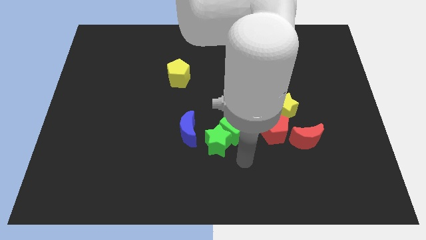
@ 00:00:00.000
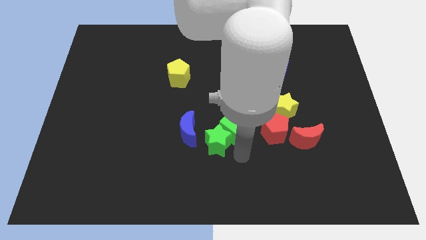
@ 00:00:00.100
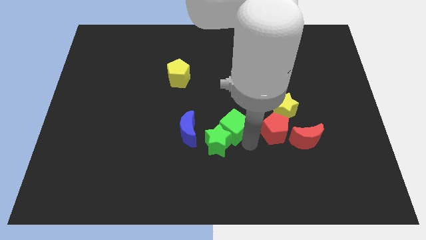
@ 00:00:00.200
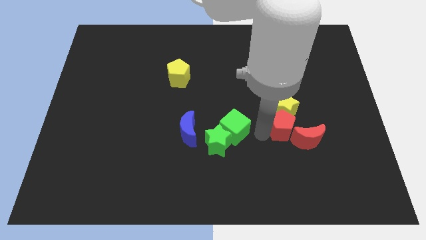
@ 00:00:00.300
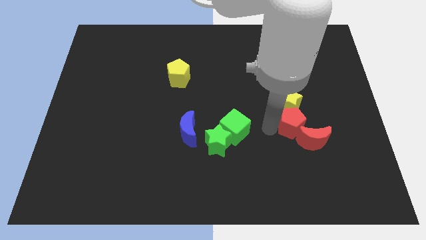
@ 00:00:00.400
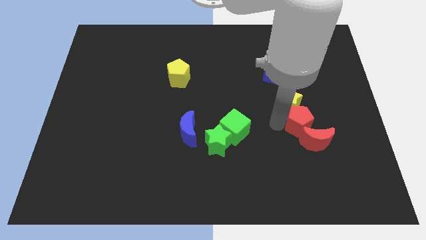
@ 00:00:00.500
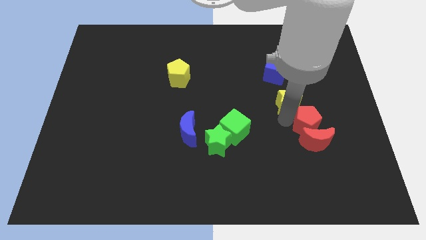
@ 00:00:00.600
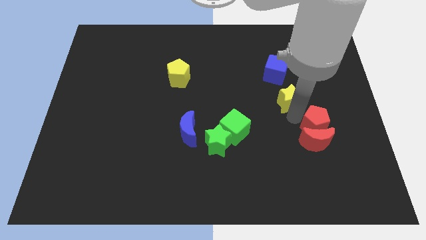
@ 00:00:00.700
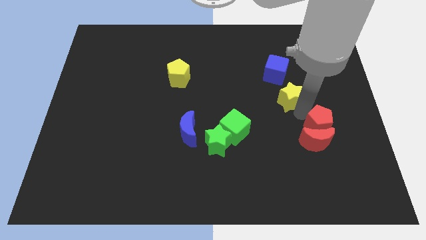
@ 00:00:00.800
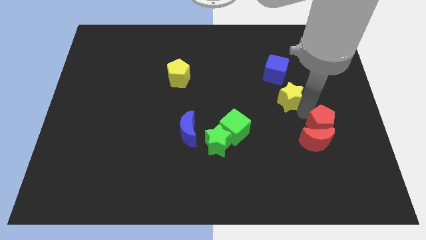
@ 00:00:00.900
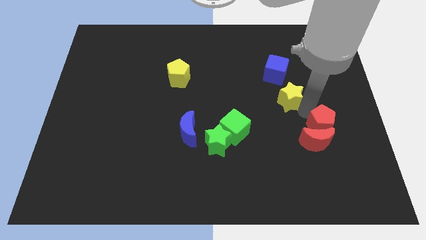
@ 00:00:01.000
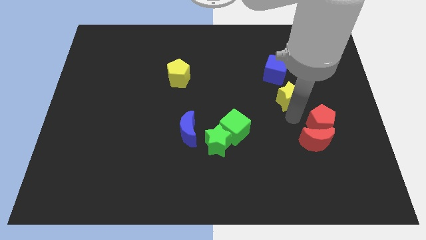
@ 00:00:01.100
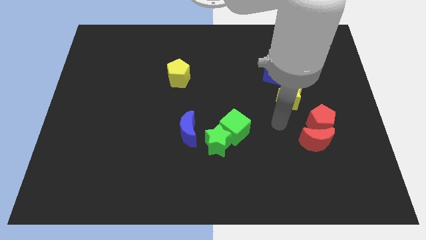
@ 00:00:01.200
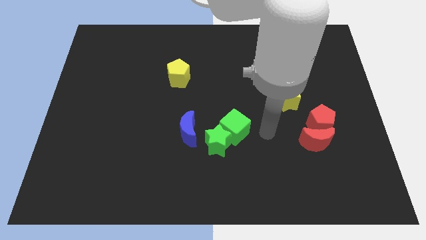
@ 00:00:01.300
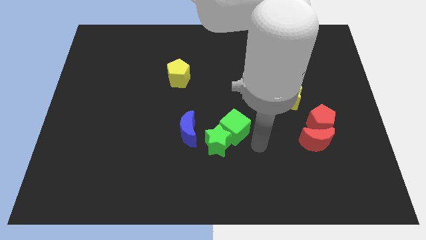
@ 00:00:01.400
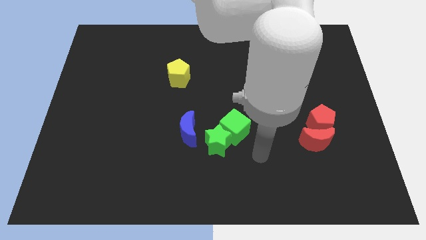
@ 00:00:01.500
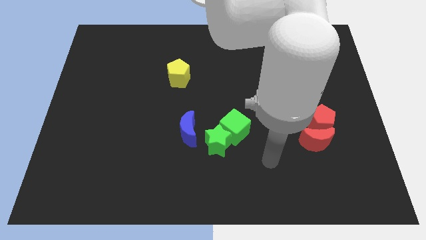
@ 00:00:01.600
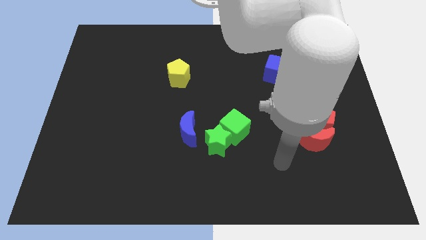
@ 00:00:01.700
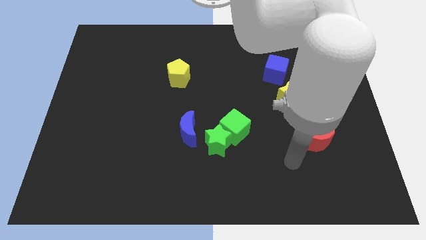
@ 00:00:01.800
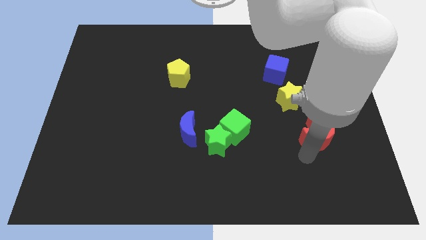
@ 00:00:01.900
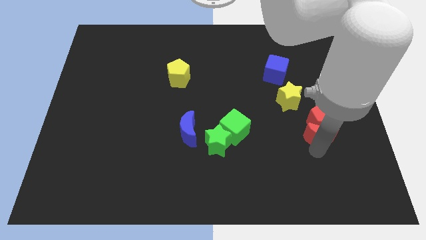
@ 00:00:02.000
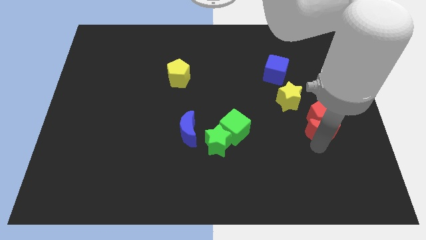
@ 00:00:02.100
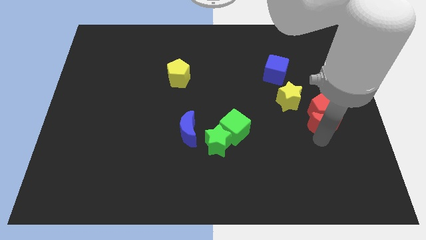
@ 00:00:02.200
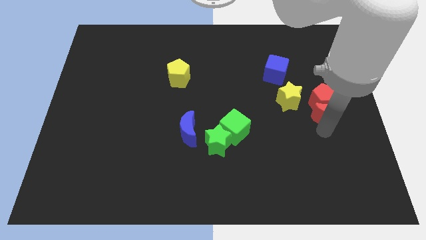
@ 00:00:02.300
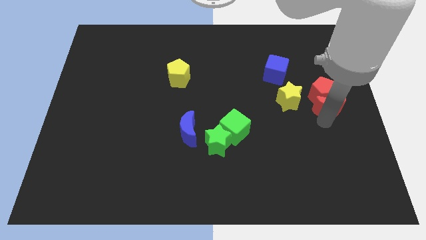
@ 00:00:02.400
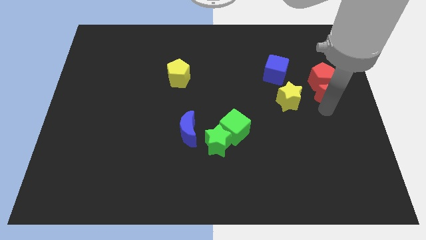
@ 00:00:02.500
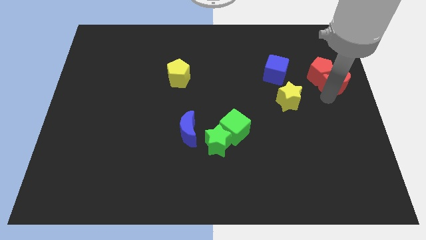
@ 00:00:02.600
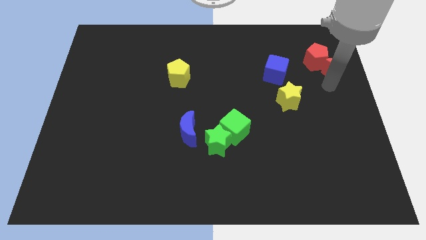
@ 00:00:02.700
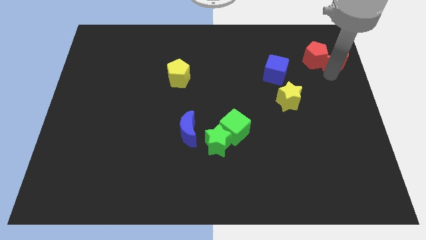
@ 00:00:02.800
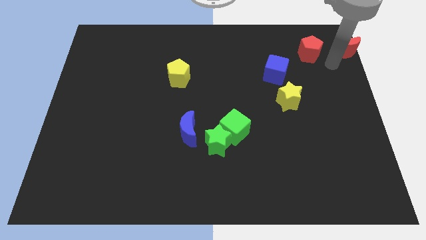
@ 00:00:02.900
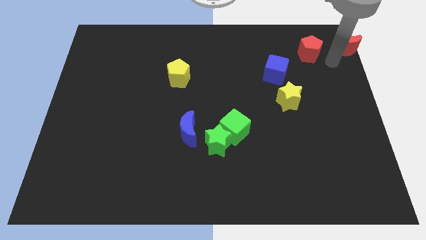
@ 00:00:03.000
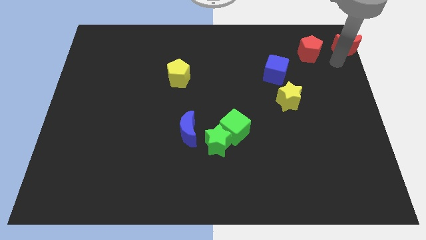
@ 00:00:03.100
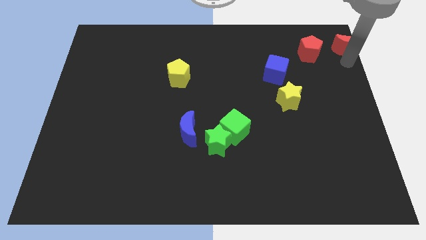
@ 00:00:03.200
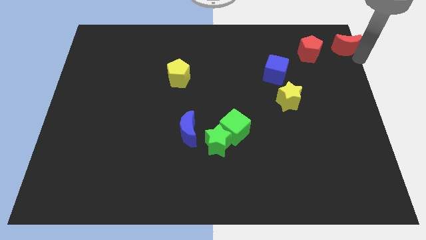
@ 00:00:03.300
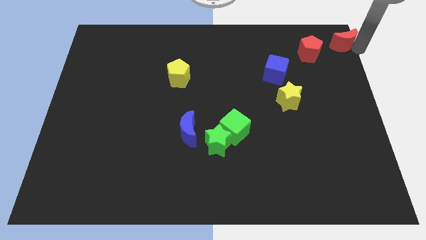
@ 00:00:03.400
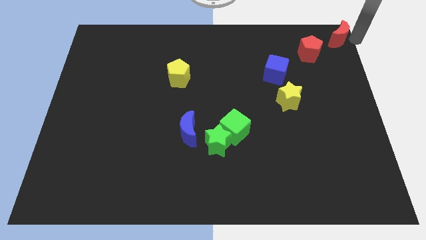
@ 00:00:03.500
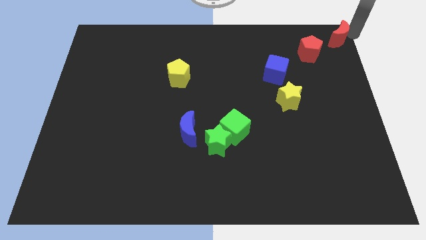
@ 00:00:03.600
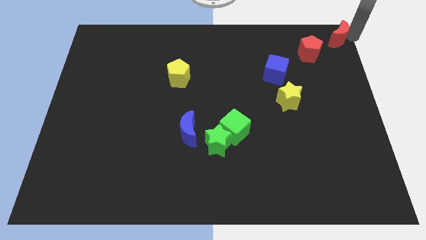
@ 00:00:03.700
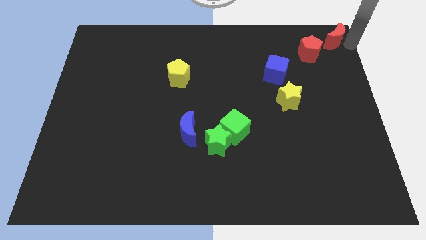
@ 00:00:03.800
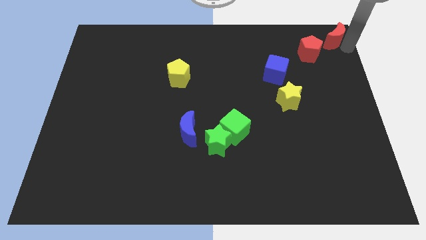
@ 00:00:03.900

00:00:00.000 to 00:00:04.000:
separate red blocks from the yellow star

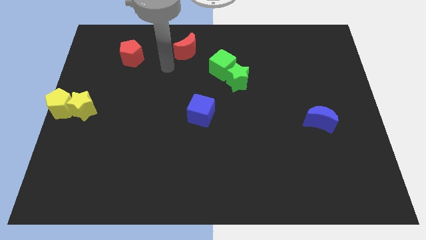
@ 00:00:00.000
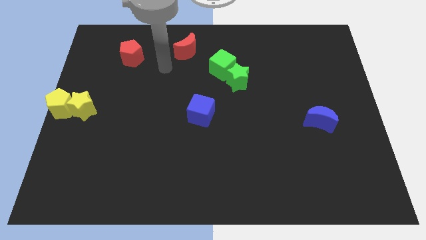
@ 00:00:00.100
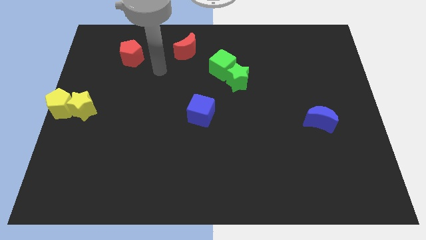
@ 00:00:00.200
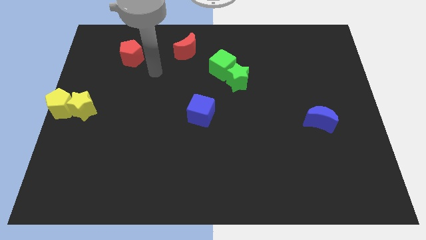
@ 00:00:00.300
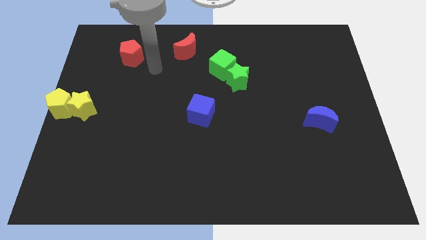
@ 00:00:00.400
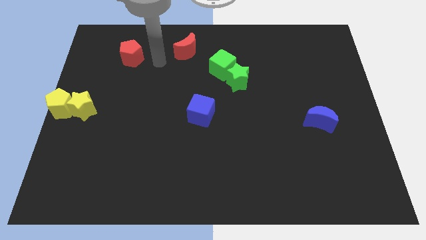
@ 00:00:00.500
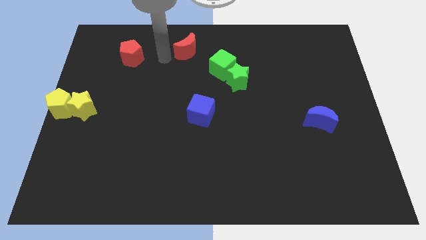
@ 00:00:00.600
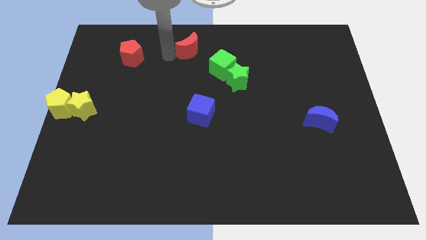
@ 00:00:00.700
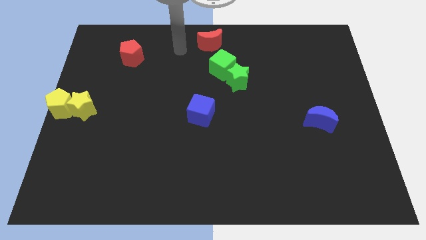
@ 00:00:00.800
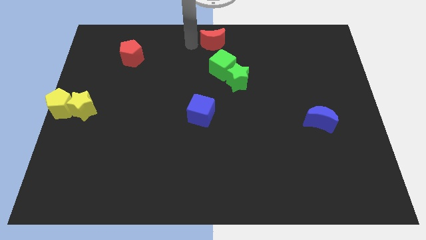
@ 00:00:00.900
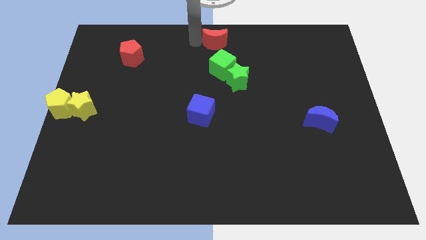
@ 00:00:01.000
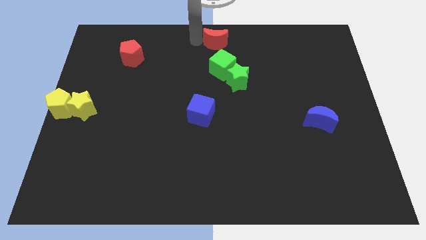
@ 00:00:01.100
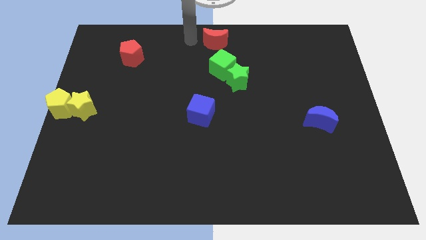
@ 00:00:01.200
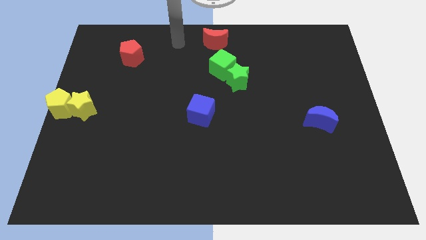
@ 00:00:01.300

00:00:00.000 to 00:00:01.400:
push the red crescent to the top center of the board

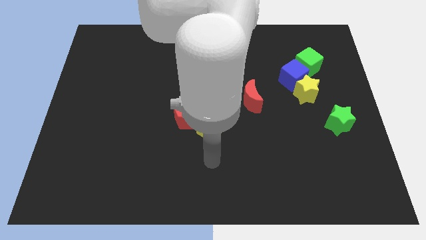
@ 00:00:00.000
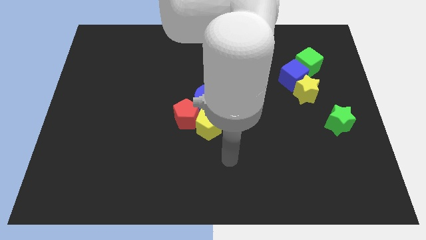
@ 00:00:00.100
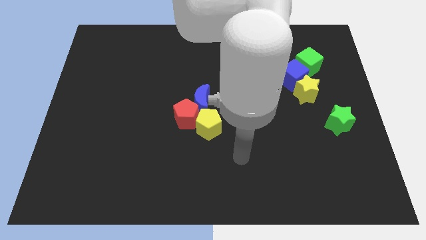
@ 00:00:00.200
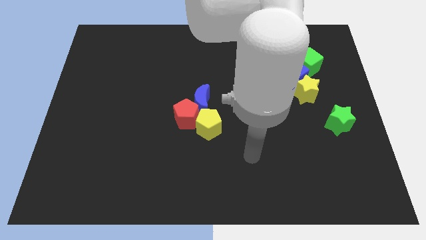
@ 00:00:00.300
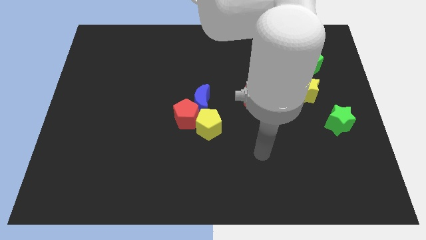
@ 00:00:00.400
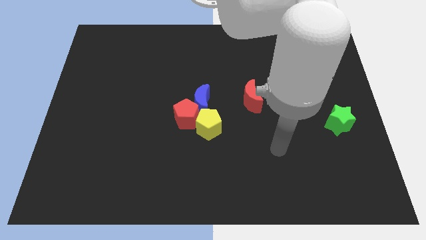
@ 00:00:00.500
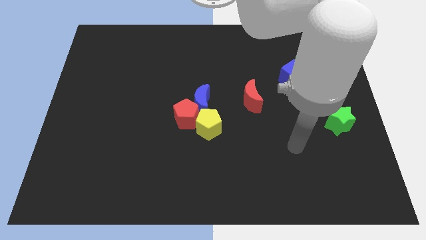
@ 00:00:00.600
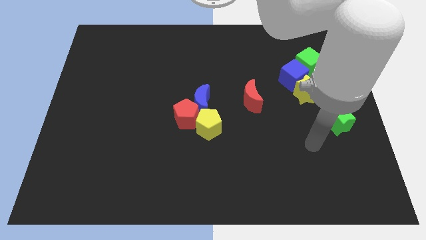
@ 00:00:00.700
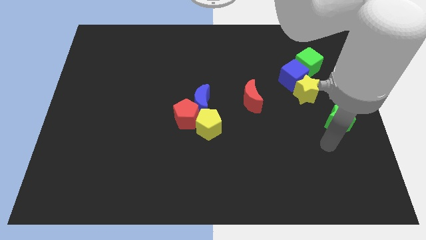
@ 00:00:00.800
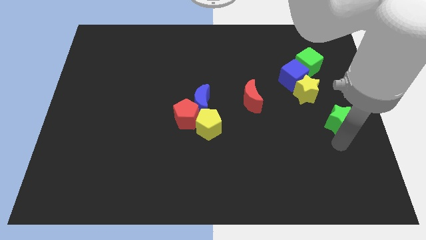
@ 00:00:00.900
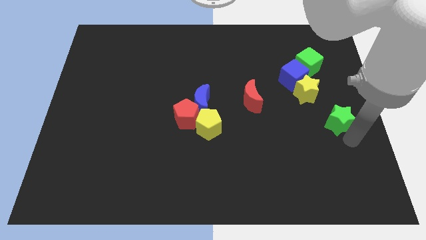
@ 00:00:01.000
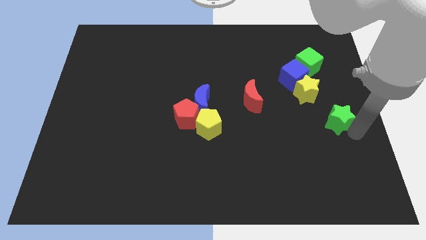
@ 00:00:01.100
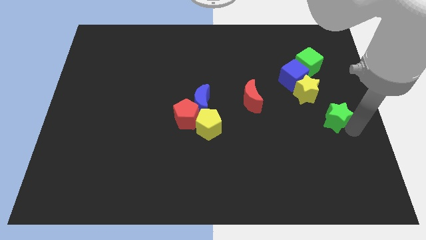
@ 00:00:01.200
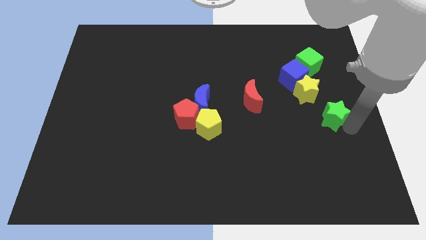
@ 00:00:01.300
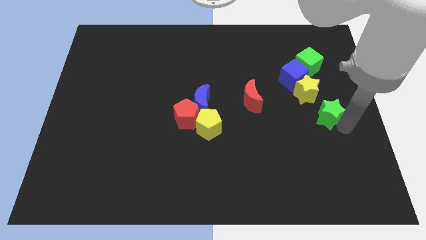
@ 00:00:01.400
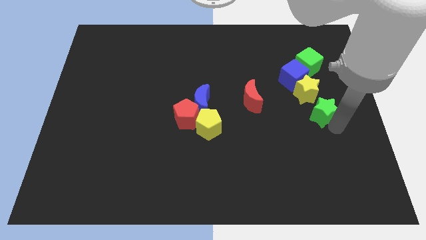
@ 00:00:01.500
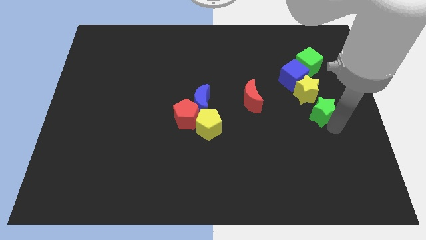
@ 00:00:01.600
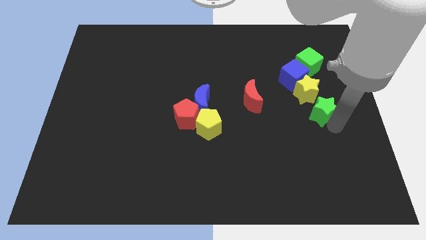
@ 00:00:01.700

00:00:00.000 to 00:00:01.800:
push the green star towards the yellow star

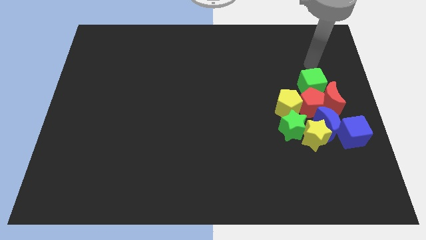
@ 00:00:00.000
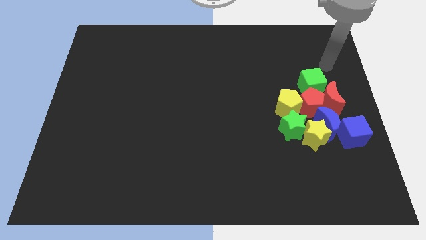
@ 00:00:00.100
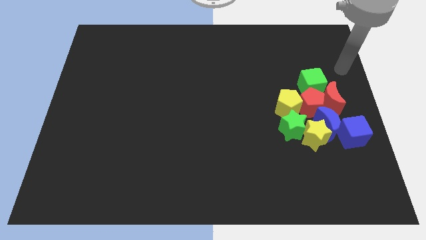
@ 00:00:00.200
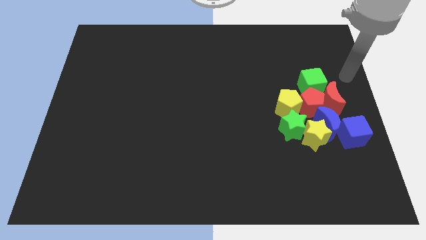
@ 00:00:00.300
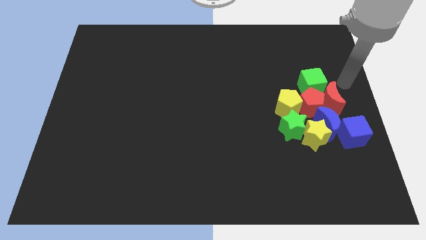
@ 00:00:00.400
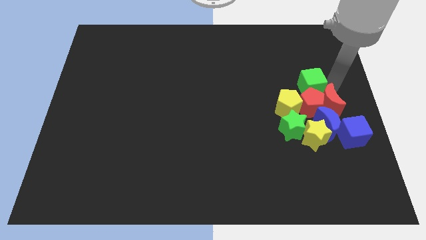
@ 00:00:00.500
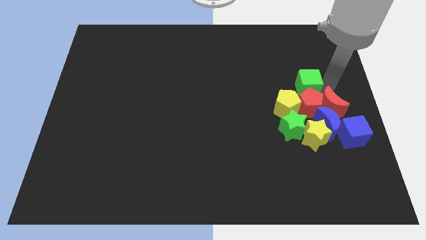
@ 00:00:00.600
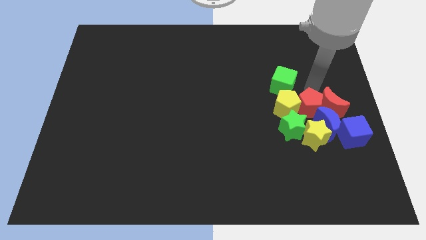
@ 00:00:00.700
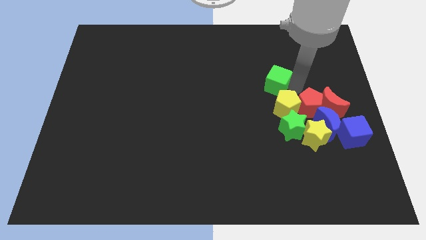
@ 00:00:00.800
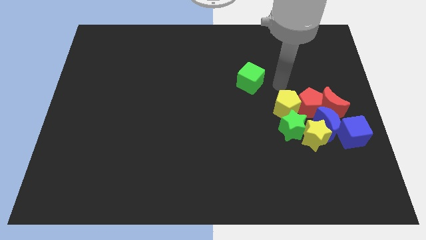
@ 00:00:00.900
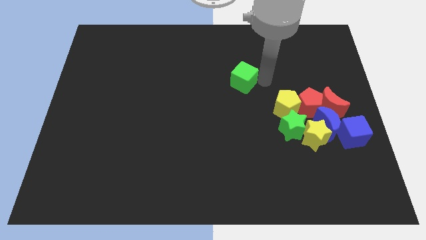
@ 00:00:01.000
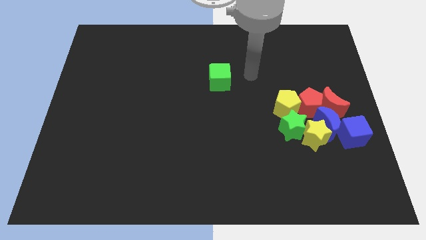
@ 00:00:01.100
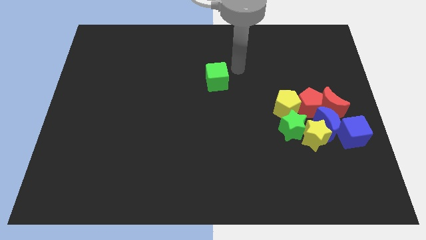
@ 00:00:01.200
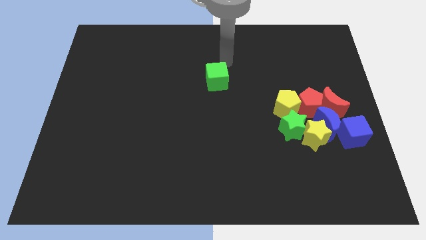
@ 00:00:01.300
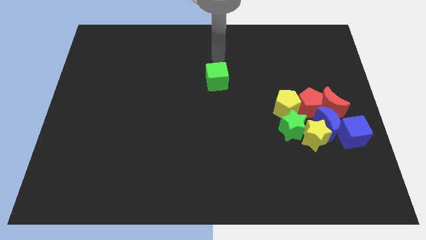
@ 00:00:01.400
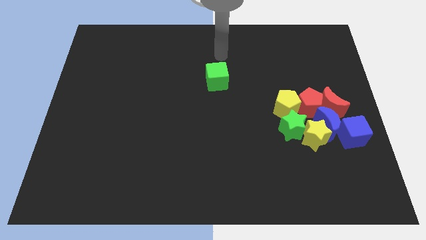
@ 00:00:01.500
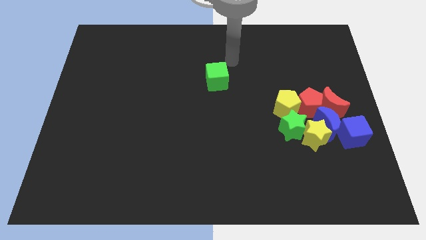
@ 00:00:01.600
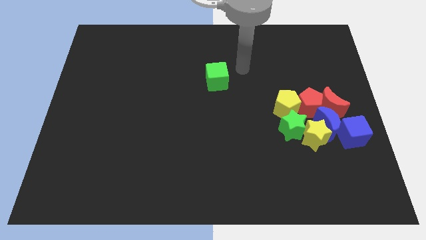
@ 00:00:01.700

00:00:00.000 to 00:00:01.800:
push the green cube away from the red pentagon
